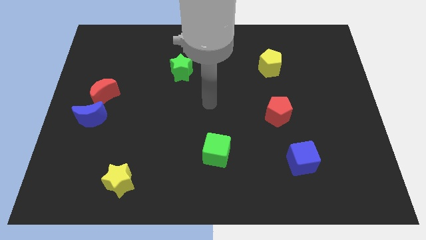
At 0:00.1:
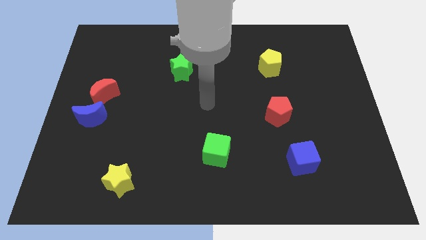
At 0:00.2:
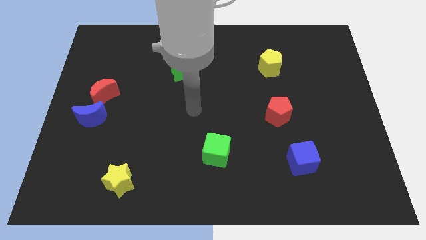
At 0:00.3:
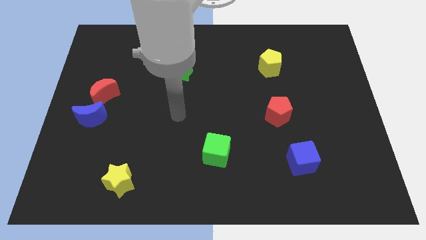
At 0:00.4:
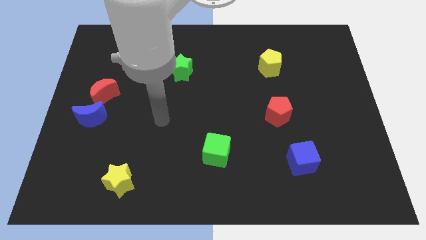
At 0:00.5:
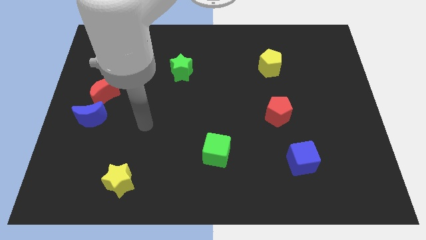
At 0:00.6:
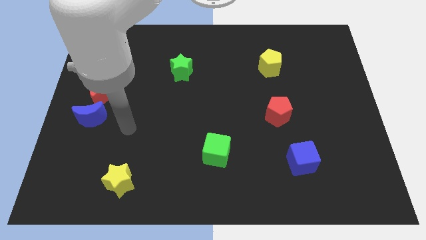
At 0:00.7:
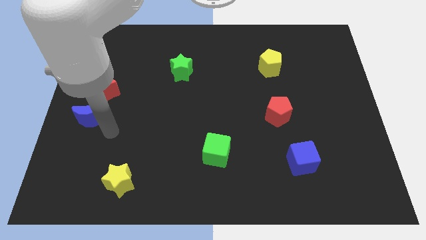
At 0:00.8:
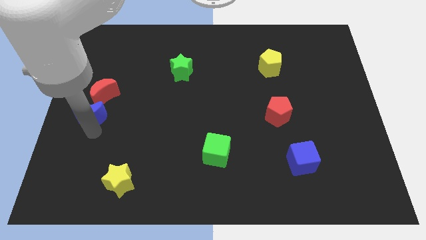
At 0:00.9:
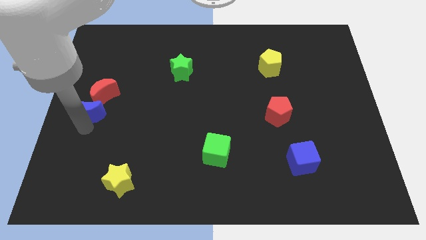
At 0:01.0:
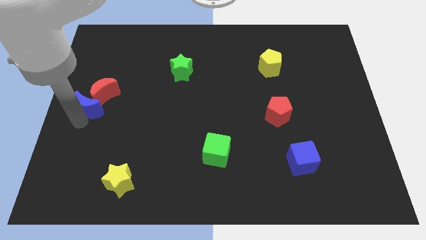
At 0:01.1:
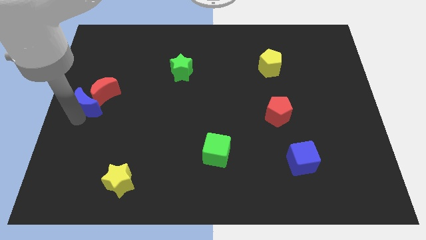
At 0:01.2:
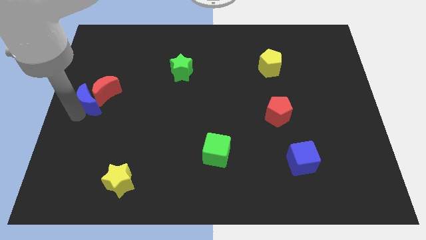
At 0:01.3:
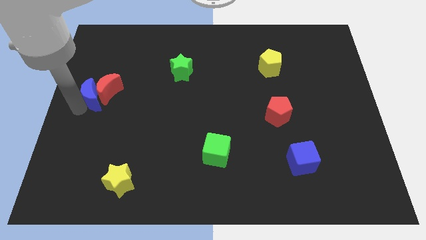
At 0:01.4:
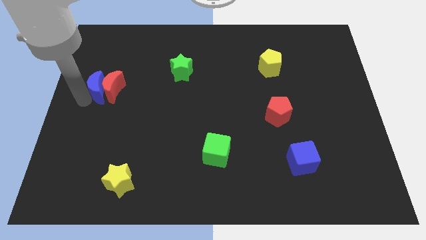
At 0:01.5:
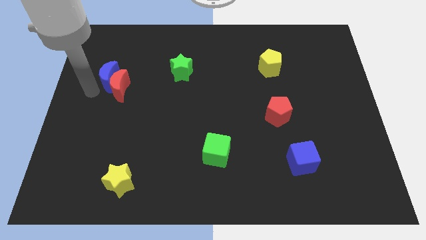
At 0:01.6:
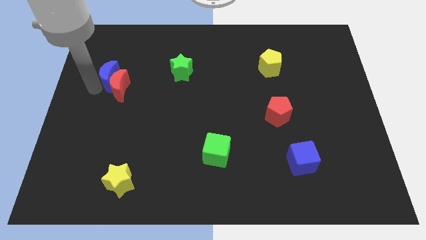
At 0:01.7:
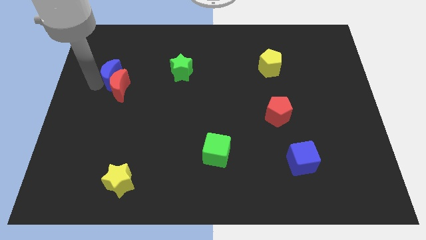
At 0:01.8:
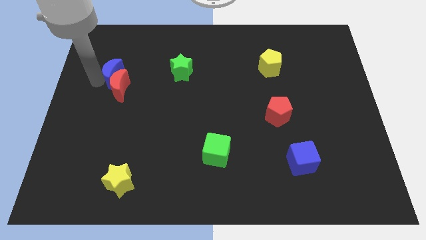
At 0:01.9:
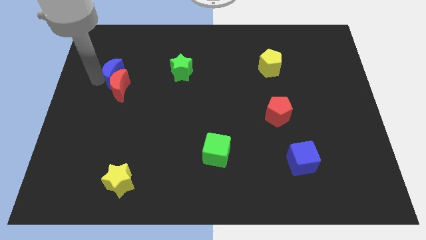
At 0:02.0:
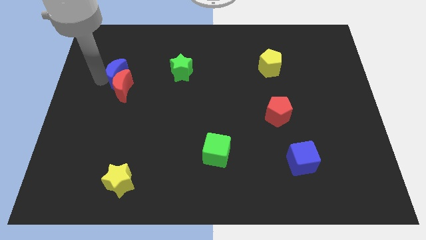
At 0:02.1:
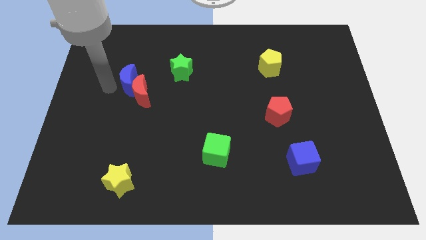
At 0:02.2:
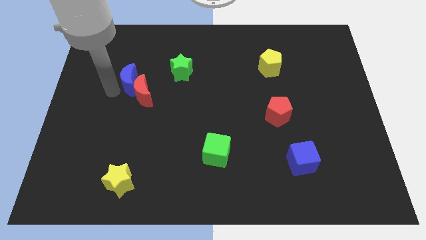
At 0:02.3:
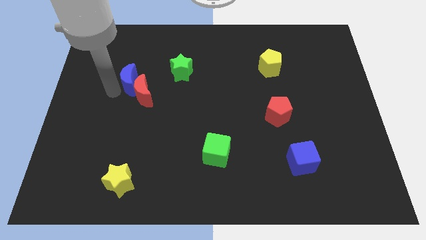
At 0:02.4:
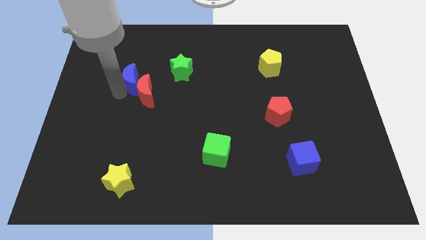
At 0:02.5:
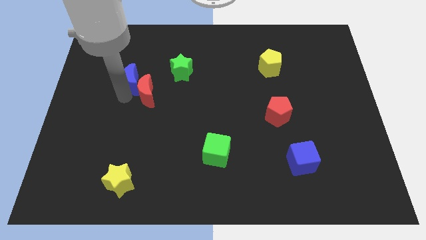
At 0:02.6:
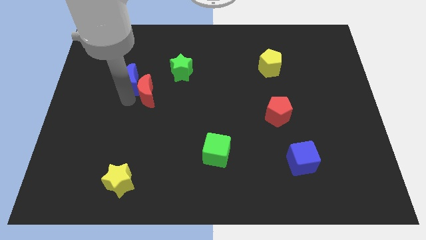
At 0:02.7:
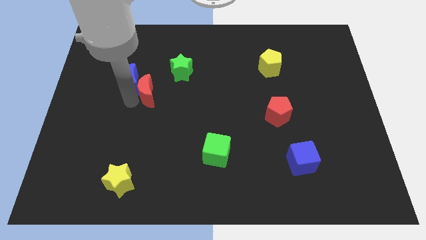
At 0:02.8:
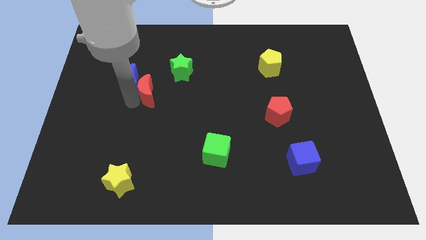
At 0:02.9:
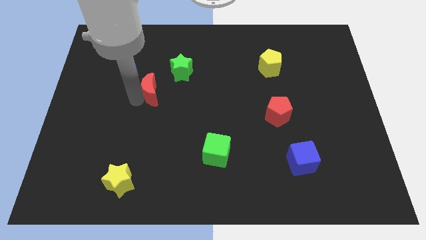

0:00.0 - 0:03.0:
move the blue and red crescents to the bottom left of the green star

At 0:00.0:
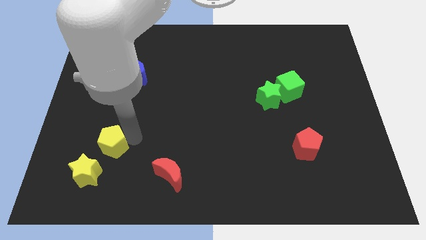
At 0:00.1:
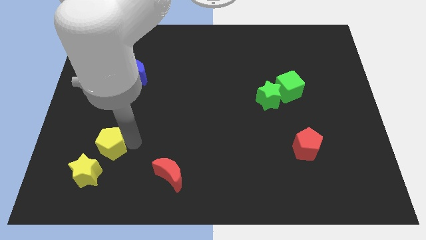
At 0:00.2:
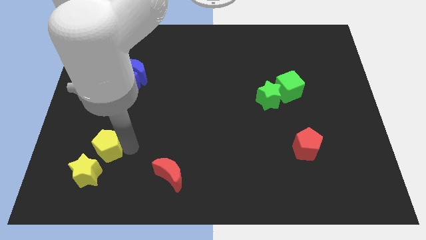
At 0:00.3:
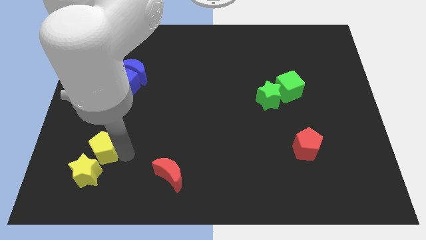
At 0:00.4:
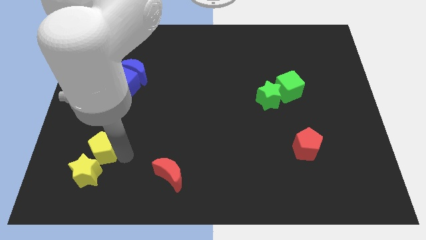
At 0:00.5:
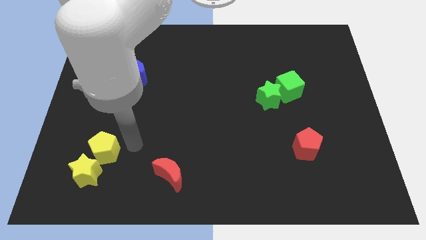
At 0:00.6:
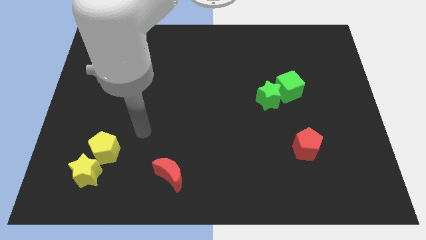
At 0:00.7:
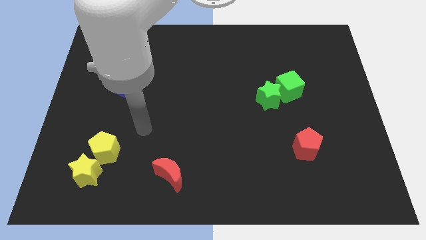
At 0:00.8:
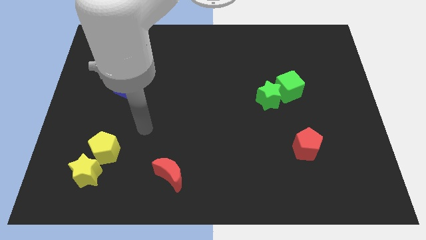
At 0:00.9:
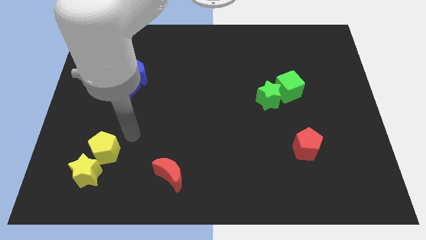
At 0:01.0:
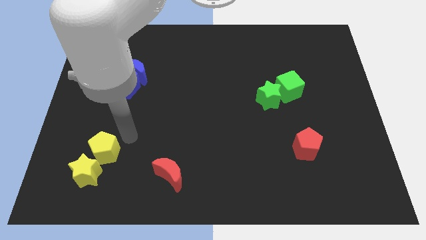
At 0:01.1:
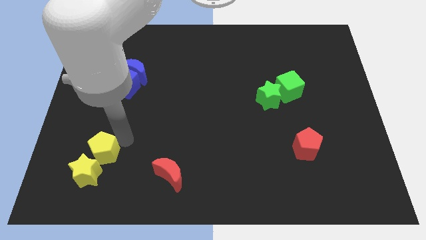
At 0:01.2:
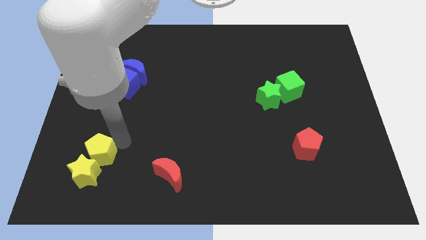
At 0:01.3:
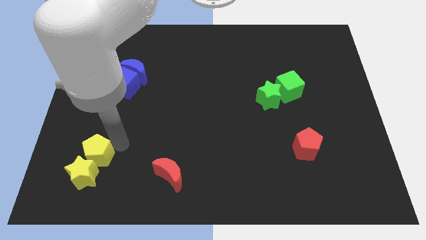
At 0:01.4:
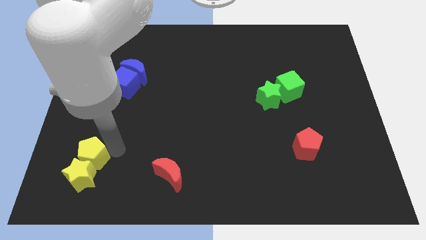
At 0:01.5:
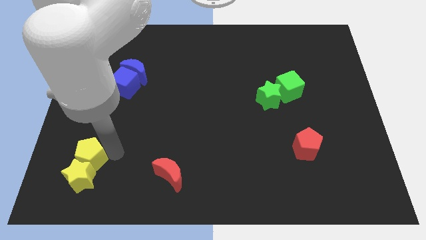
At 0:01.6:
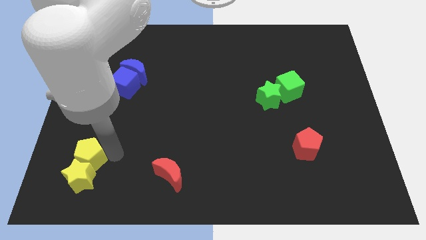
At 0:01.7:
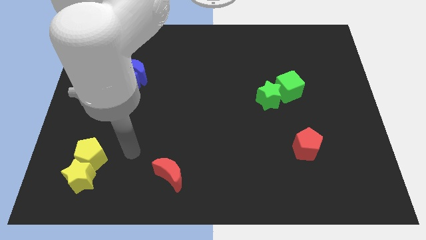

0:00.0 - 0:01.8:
push the yellow pentagon into the yellow star

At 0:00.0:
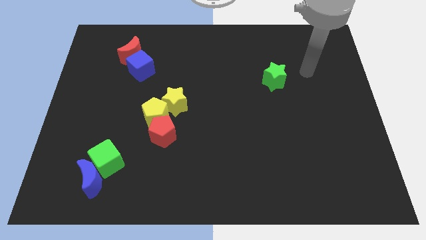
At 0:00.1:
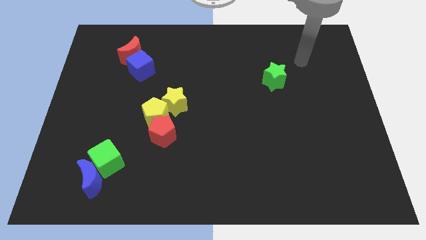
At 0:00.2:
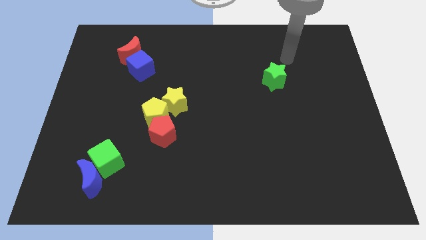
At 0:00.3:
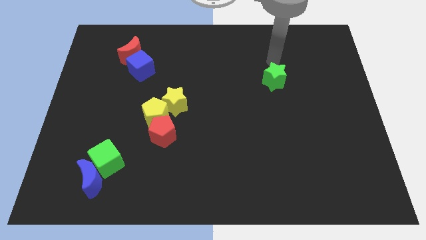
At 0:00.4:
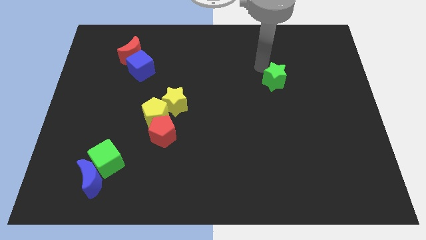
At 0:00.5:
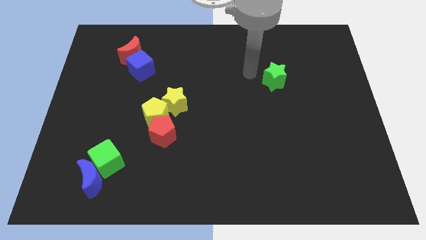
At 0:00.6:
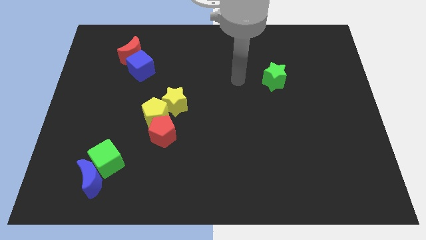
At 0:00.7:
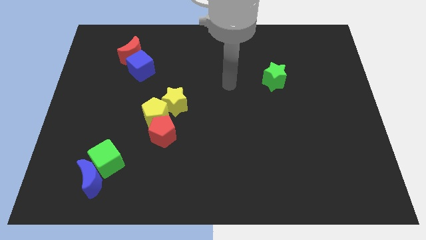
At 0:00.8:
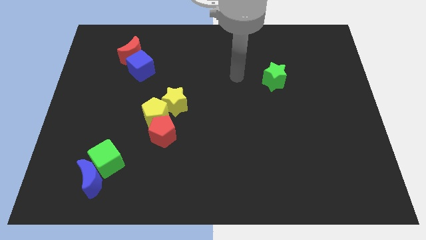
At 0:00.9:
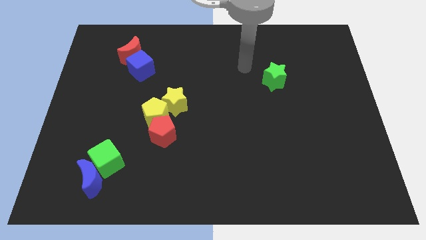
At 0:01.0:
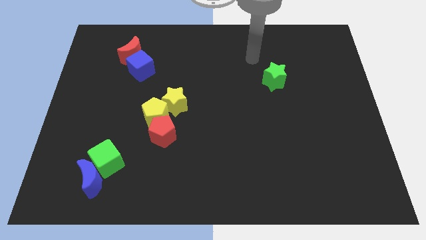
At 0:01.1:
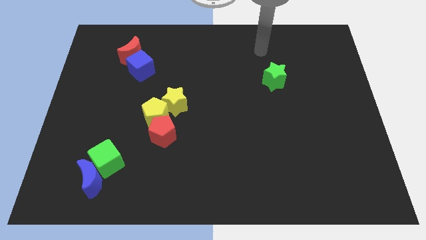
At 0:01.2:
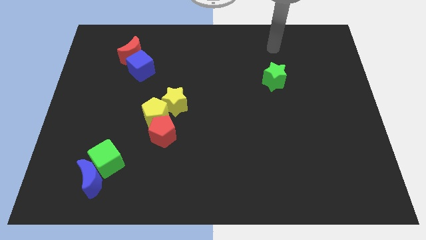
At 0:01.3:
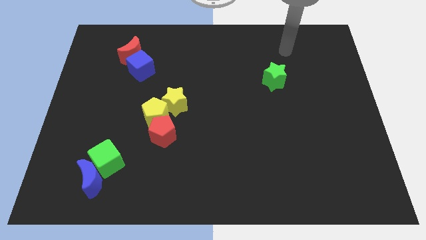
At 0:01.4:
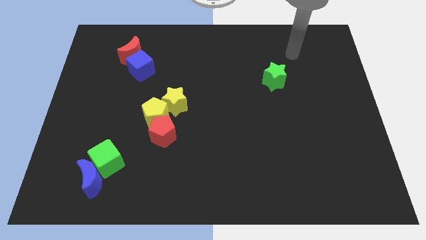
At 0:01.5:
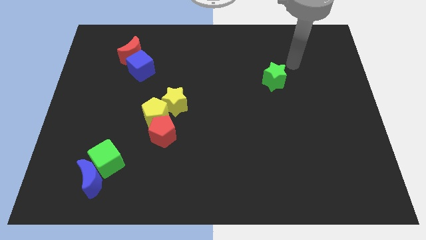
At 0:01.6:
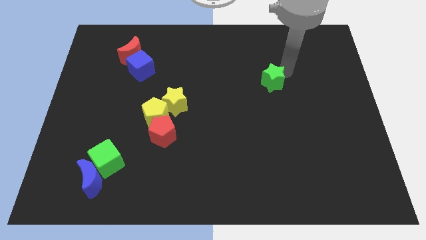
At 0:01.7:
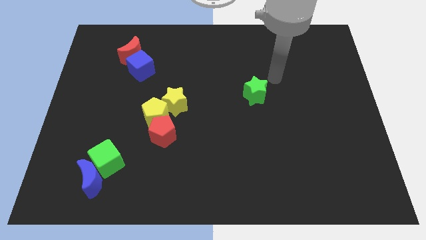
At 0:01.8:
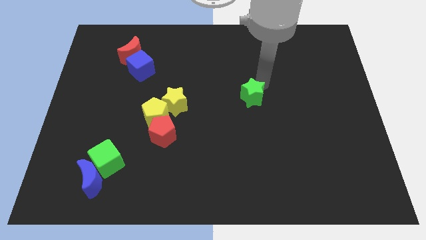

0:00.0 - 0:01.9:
push the green star towards the center of the board

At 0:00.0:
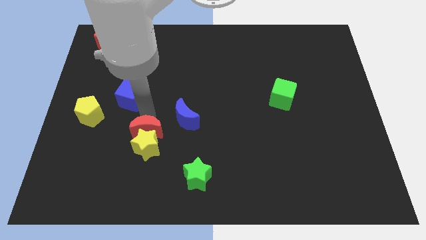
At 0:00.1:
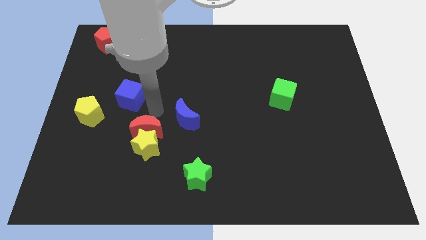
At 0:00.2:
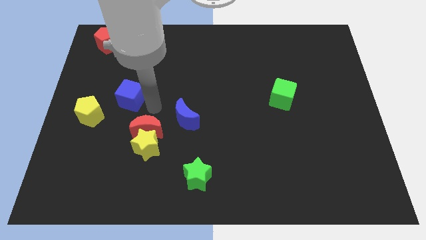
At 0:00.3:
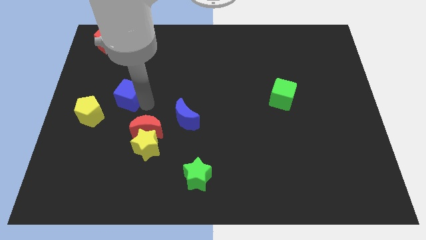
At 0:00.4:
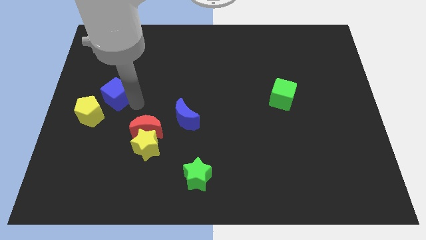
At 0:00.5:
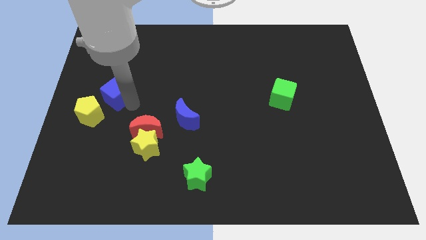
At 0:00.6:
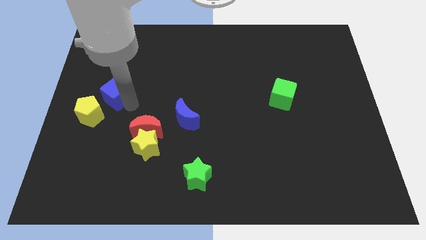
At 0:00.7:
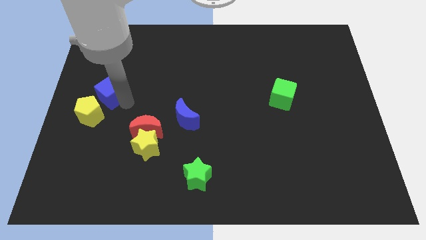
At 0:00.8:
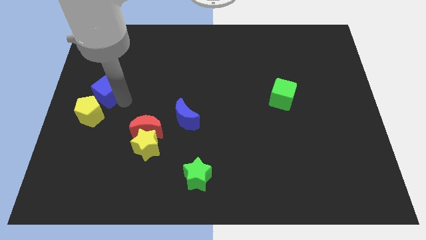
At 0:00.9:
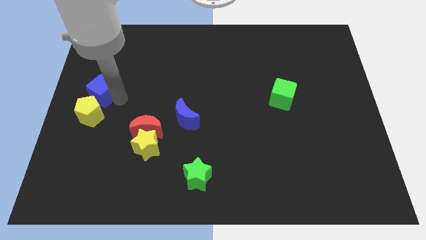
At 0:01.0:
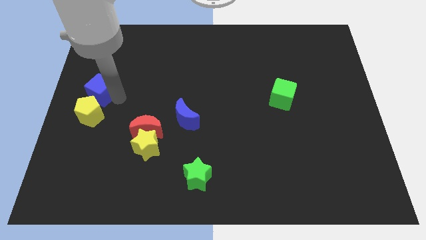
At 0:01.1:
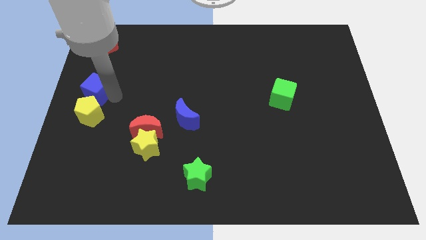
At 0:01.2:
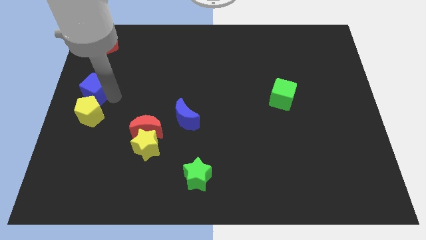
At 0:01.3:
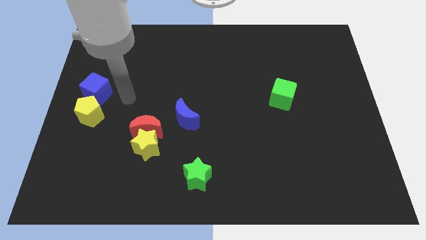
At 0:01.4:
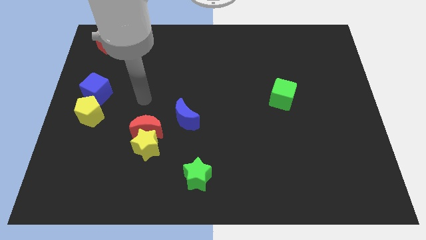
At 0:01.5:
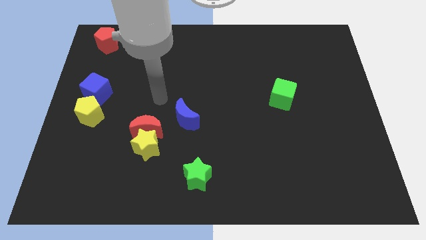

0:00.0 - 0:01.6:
put the blue cube above the yellow pentagon

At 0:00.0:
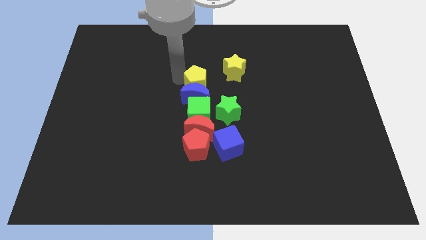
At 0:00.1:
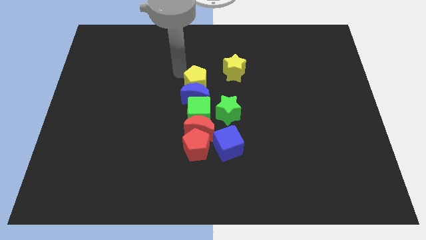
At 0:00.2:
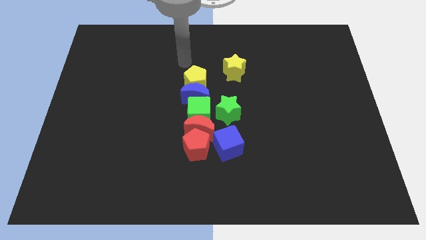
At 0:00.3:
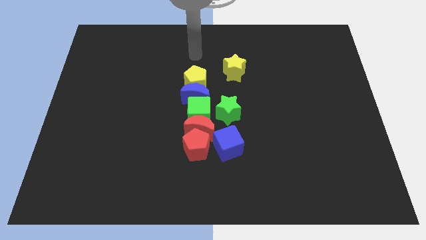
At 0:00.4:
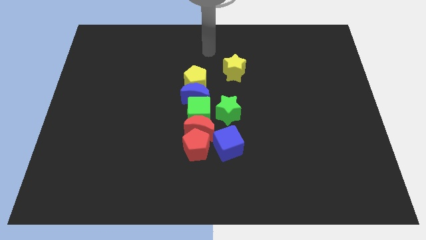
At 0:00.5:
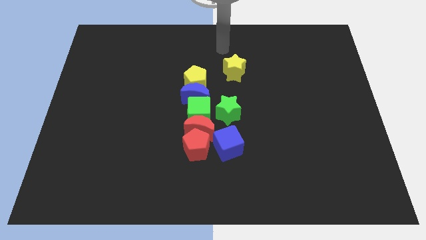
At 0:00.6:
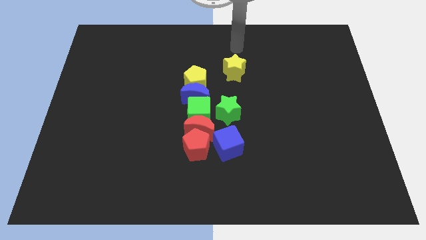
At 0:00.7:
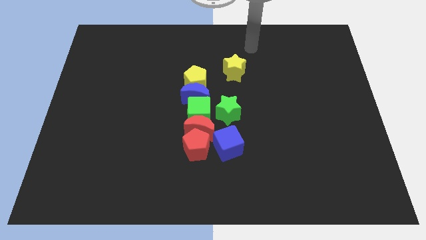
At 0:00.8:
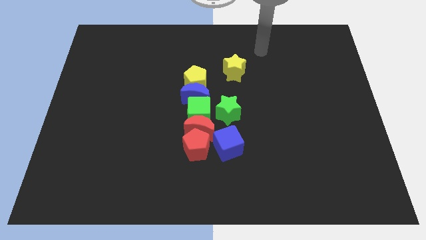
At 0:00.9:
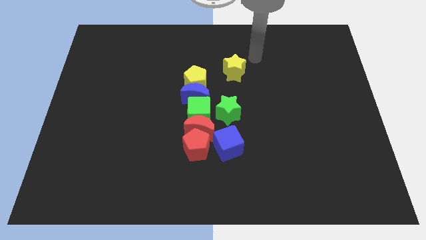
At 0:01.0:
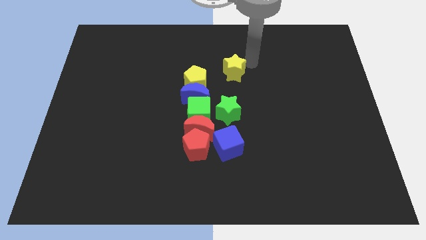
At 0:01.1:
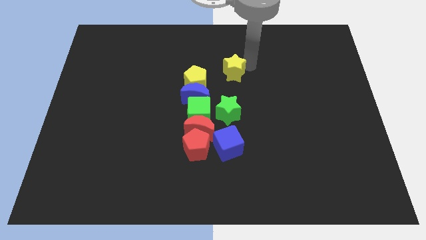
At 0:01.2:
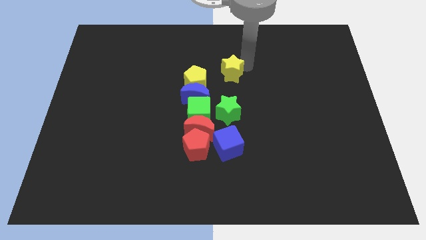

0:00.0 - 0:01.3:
move your arm towards the yellow star
